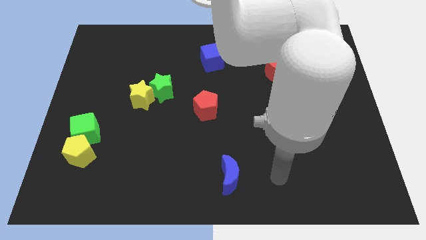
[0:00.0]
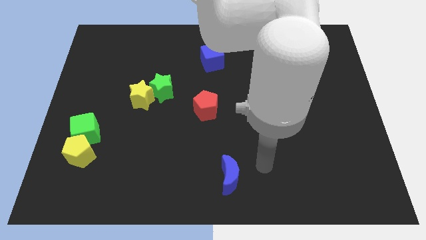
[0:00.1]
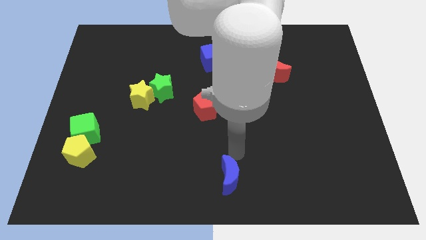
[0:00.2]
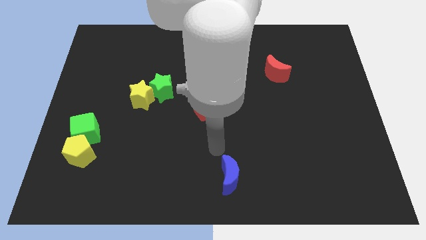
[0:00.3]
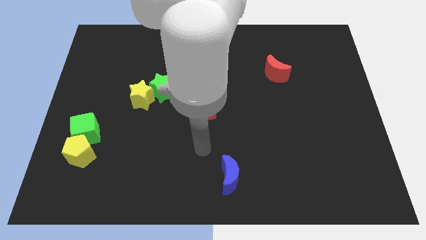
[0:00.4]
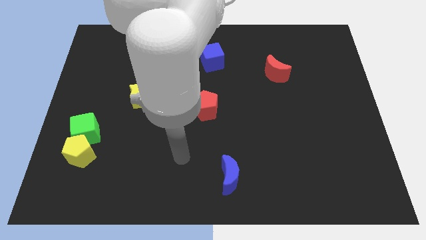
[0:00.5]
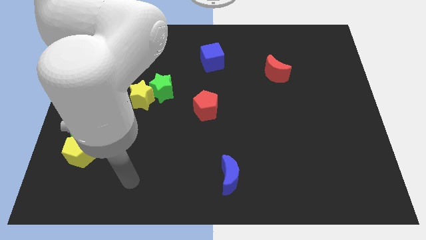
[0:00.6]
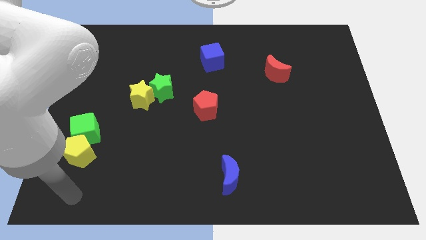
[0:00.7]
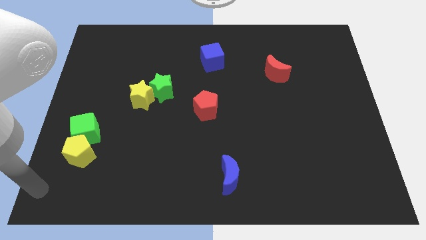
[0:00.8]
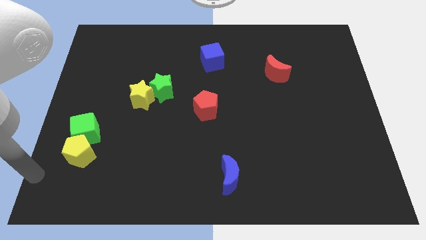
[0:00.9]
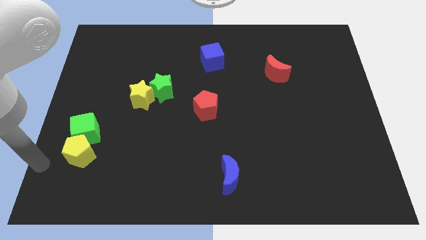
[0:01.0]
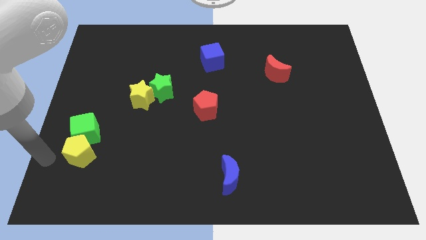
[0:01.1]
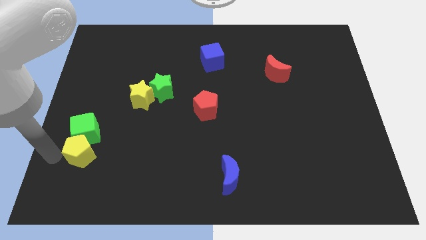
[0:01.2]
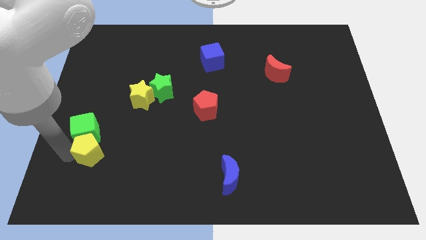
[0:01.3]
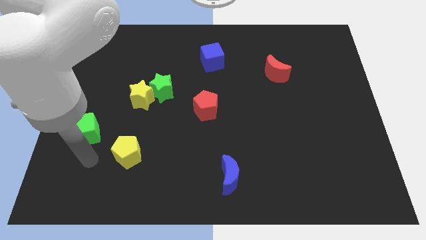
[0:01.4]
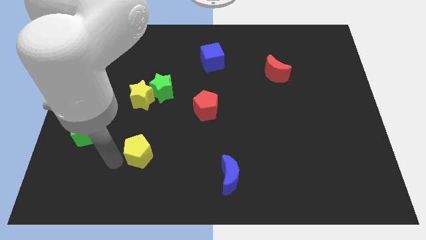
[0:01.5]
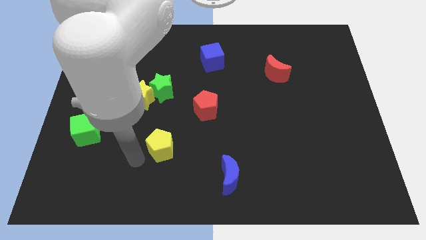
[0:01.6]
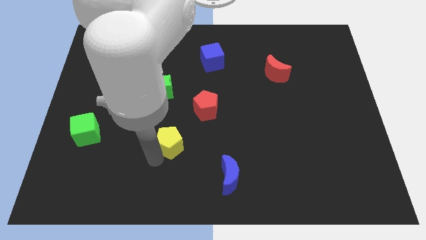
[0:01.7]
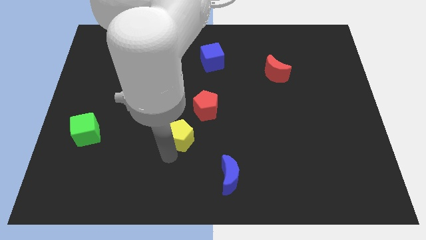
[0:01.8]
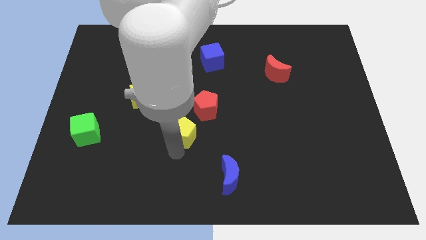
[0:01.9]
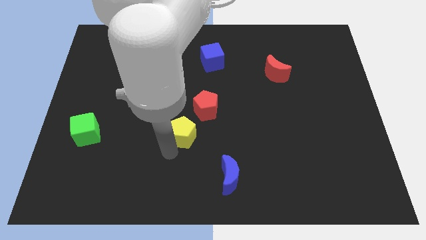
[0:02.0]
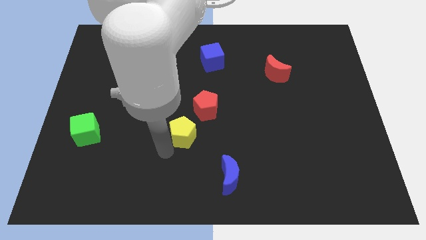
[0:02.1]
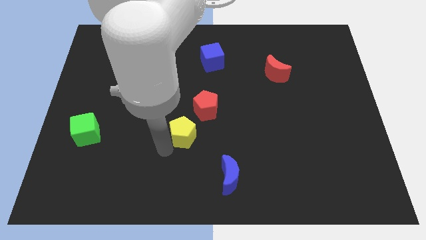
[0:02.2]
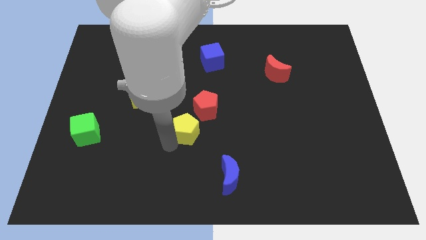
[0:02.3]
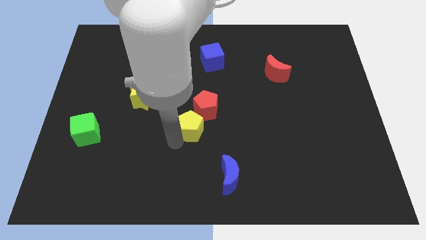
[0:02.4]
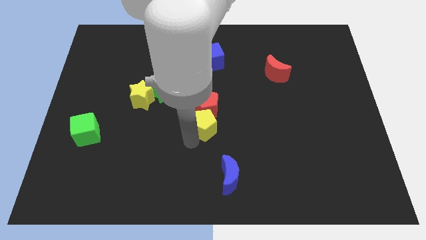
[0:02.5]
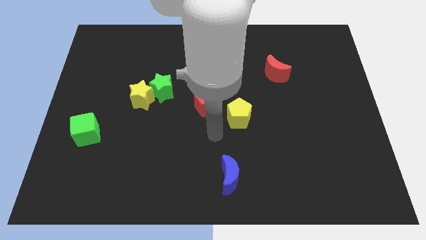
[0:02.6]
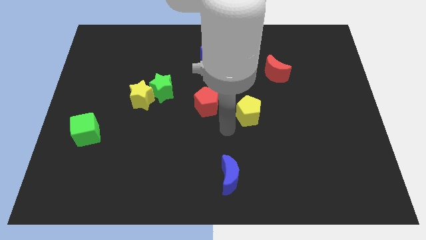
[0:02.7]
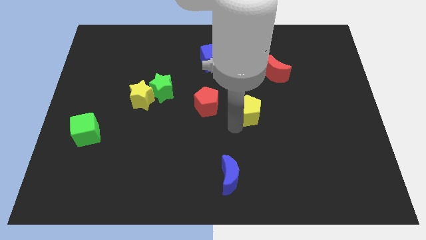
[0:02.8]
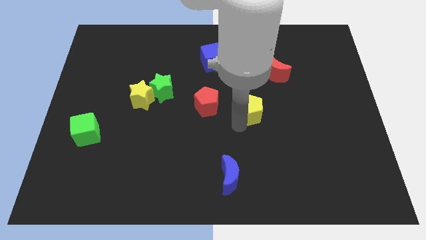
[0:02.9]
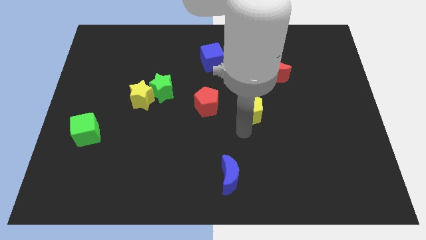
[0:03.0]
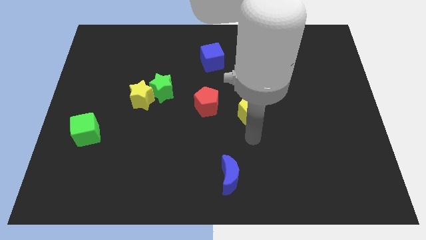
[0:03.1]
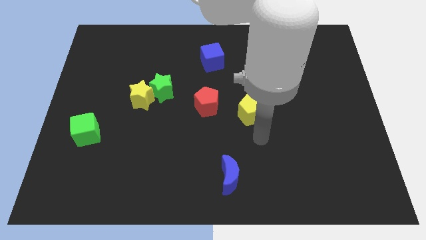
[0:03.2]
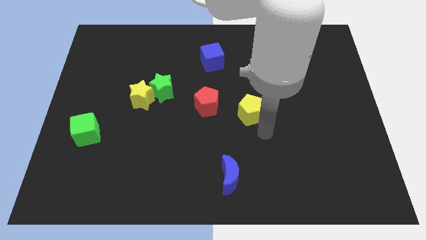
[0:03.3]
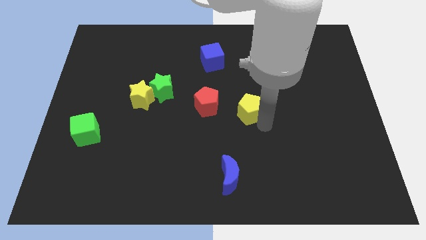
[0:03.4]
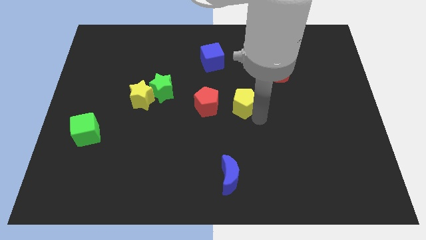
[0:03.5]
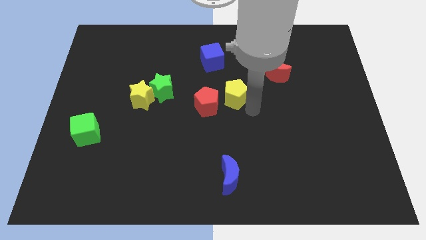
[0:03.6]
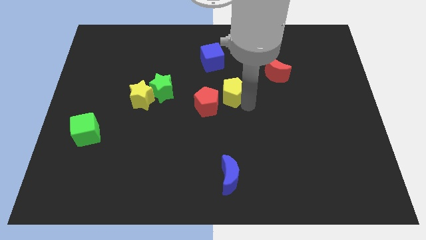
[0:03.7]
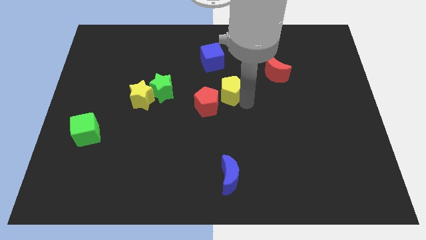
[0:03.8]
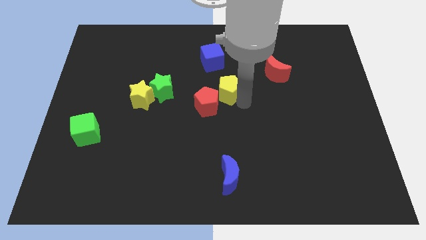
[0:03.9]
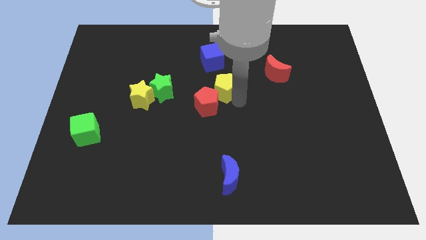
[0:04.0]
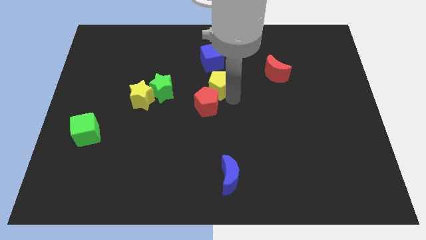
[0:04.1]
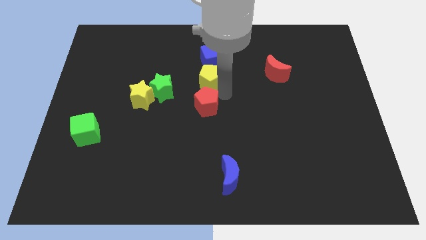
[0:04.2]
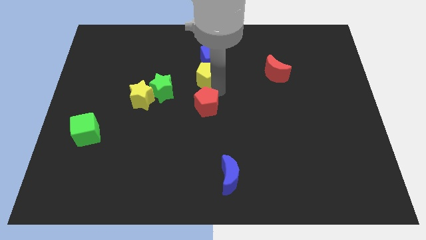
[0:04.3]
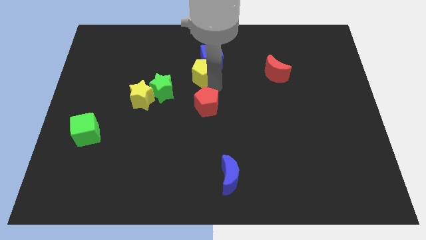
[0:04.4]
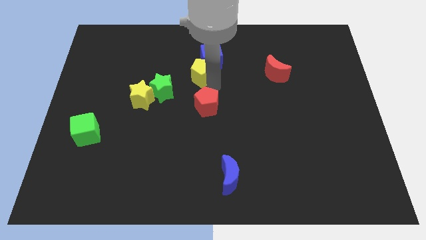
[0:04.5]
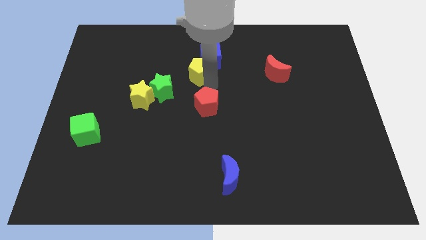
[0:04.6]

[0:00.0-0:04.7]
put the yellow pentagon towards the blue cube

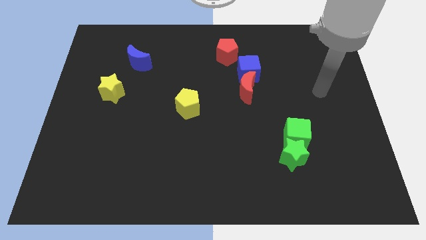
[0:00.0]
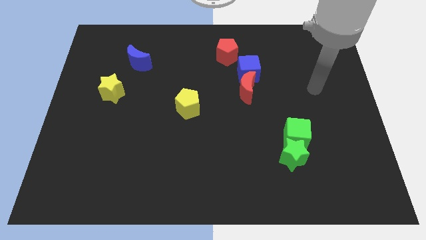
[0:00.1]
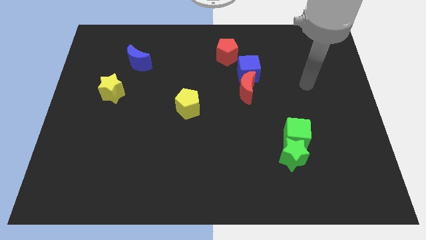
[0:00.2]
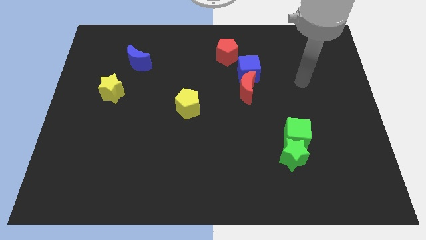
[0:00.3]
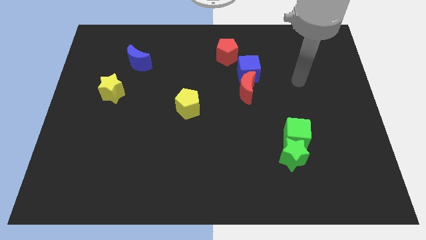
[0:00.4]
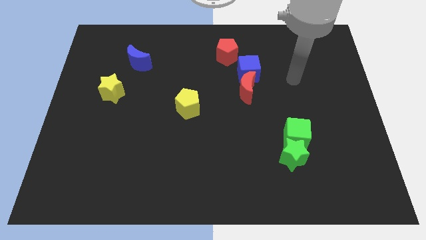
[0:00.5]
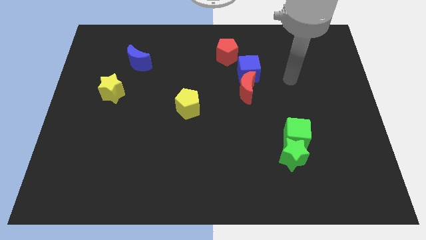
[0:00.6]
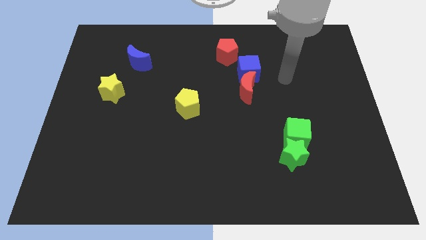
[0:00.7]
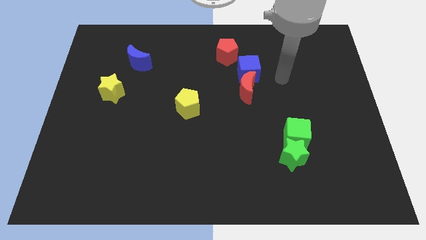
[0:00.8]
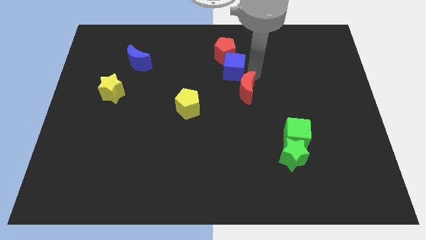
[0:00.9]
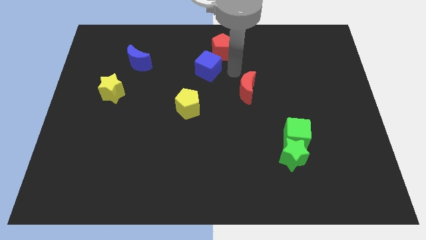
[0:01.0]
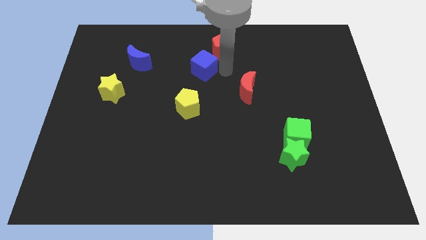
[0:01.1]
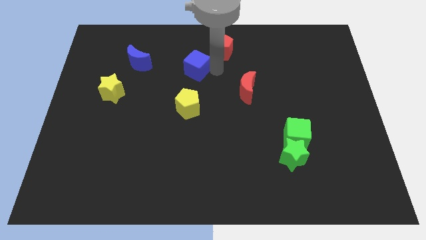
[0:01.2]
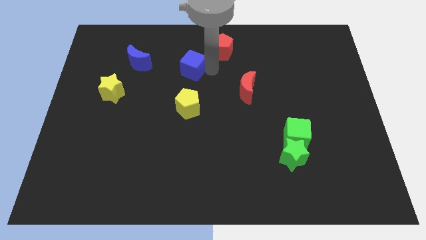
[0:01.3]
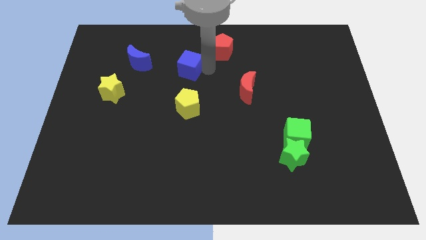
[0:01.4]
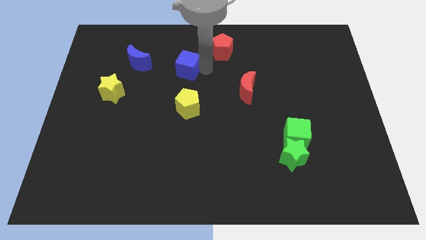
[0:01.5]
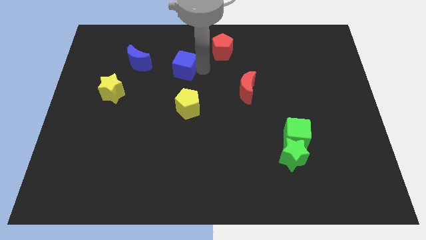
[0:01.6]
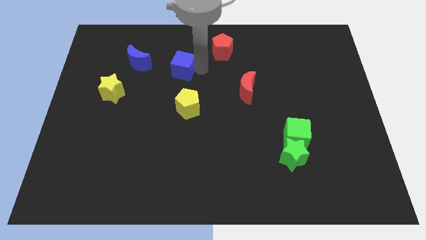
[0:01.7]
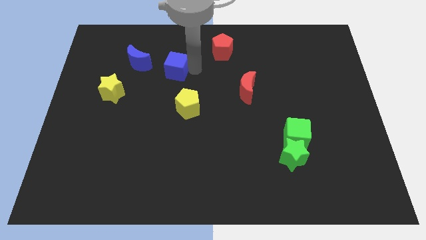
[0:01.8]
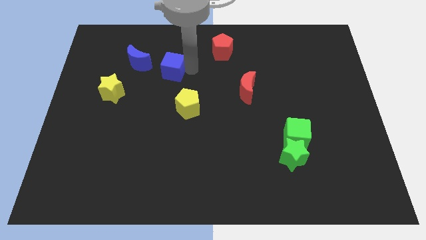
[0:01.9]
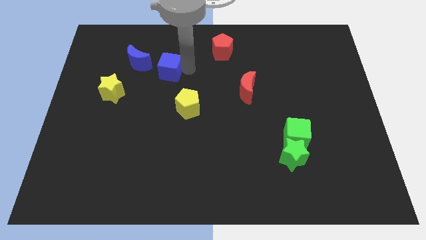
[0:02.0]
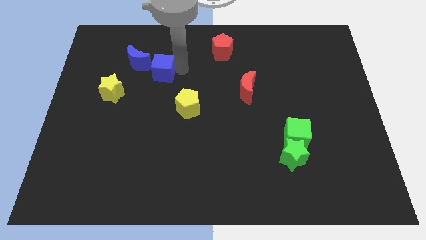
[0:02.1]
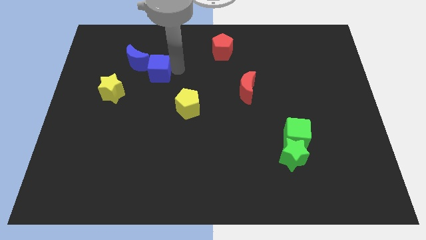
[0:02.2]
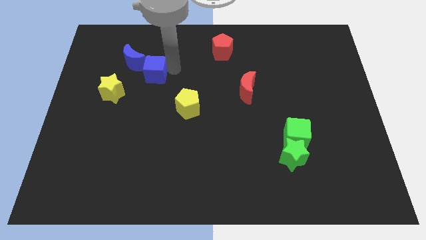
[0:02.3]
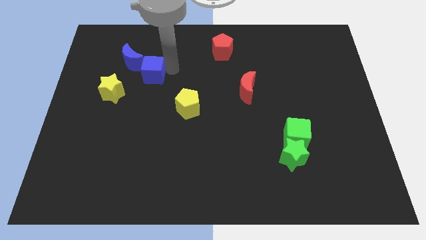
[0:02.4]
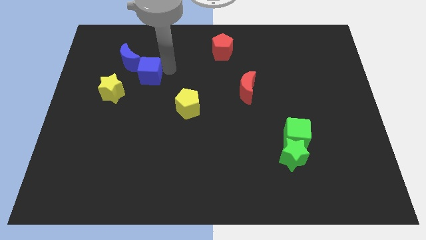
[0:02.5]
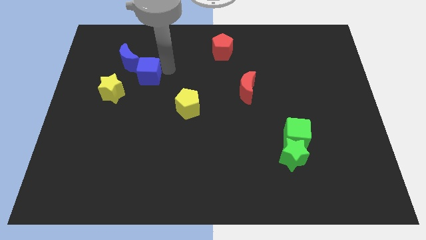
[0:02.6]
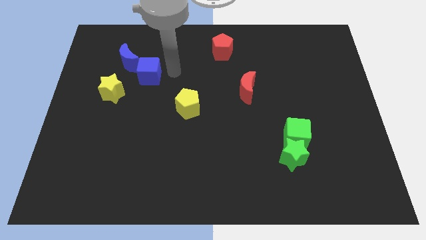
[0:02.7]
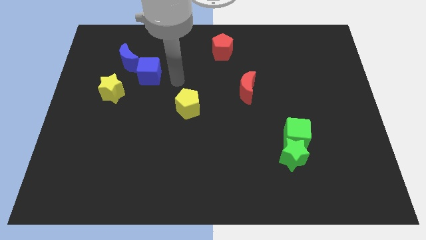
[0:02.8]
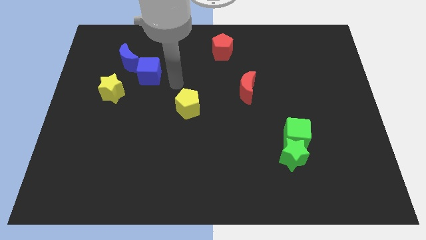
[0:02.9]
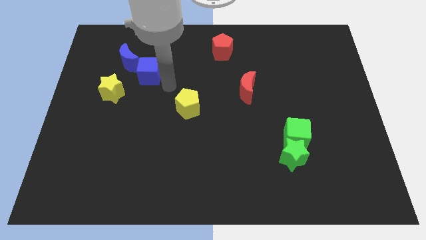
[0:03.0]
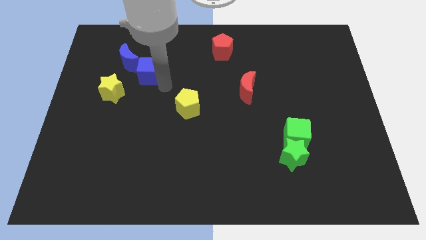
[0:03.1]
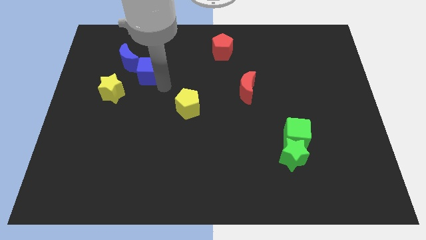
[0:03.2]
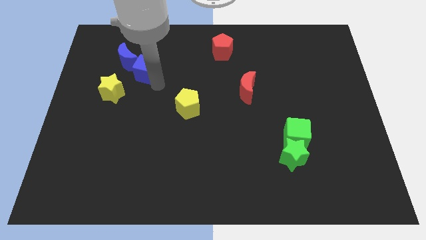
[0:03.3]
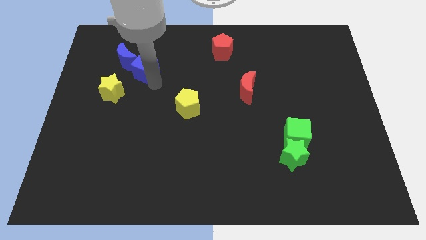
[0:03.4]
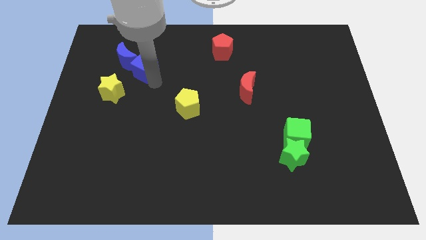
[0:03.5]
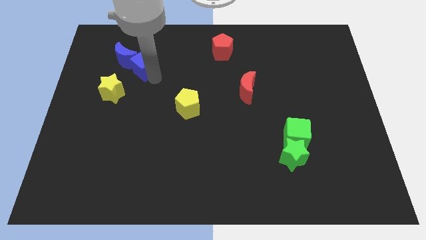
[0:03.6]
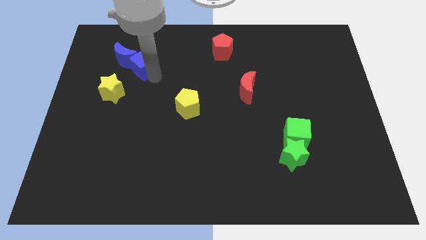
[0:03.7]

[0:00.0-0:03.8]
push the blue cube close to the blue moon

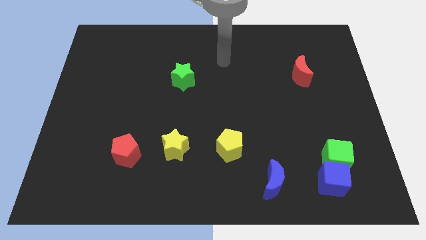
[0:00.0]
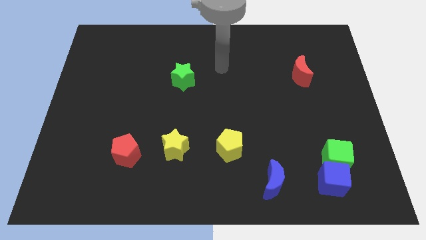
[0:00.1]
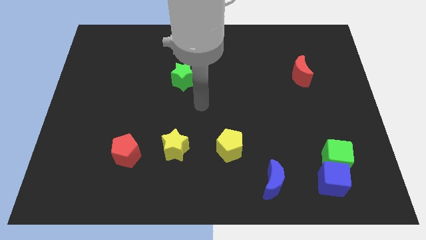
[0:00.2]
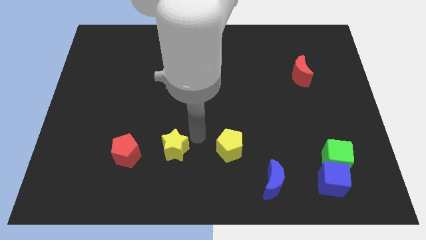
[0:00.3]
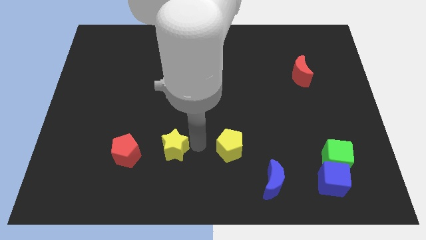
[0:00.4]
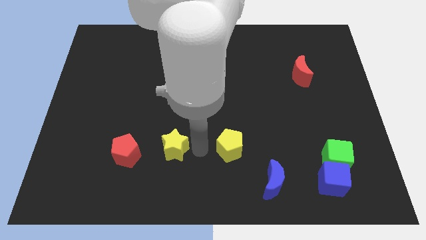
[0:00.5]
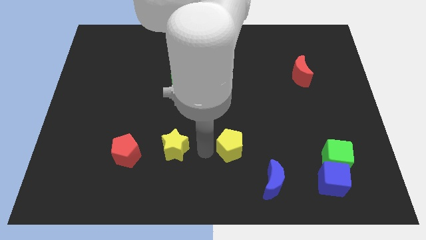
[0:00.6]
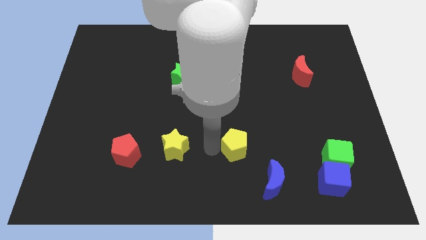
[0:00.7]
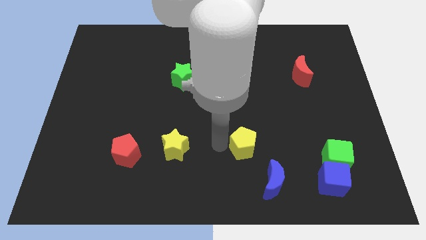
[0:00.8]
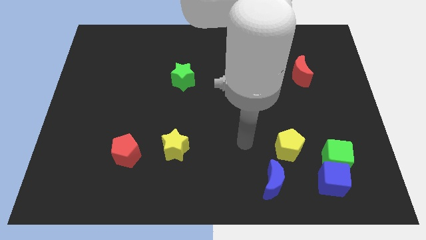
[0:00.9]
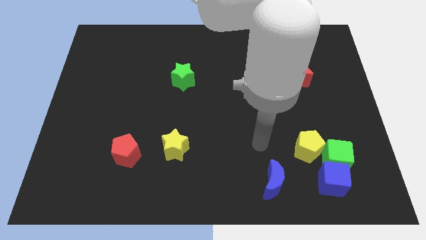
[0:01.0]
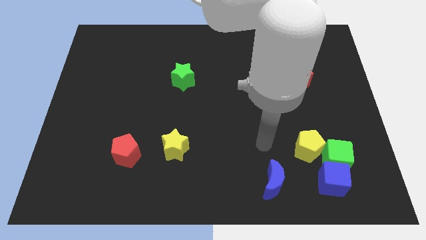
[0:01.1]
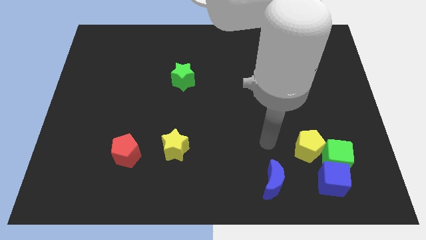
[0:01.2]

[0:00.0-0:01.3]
push the yellow pentagon close to the green cube
